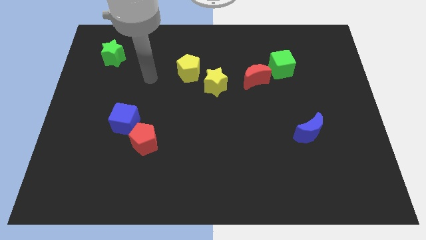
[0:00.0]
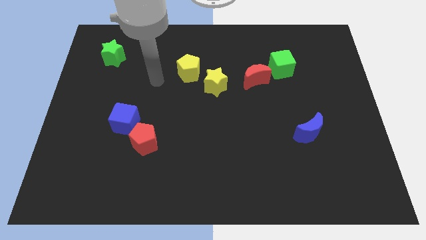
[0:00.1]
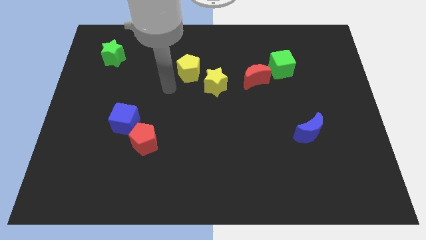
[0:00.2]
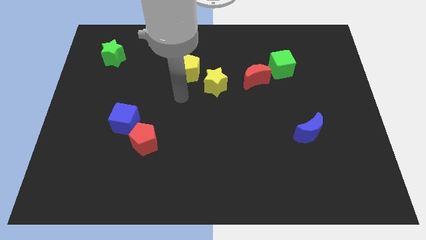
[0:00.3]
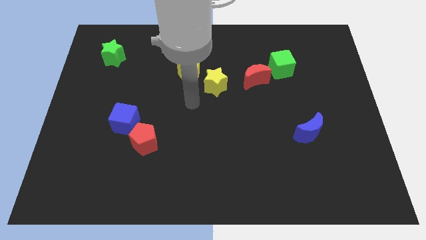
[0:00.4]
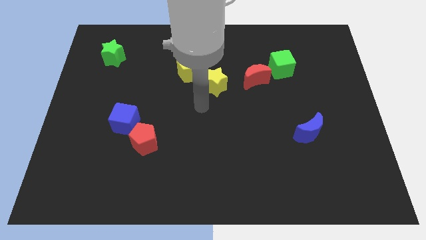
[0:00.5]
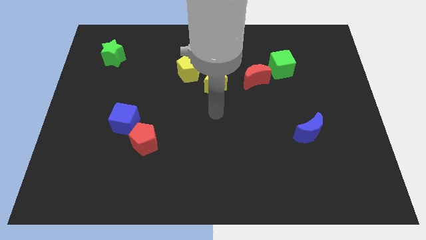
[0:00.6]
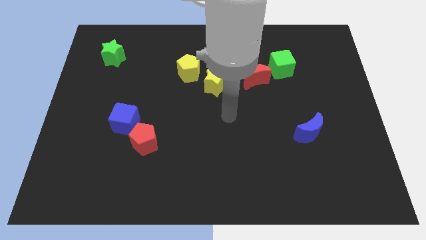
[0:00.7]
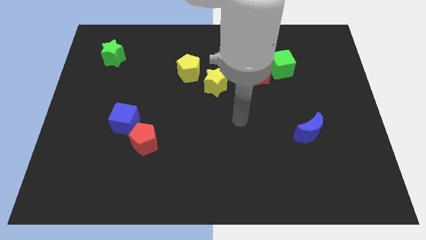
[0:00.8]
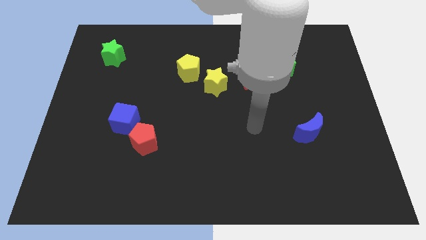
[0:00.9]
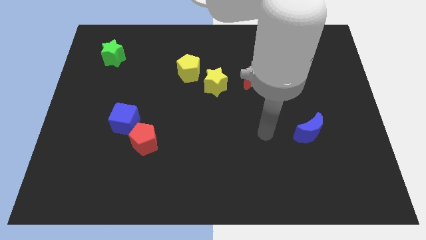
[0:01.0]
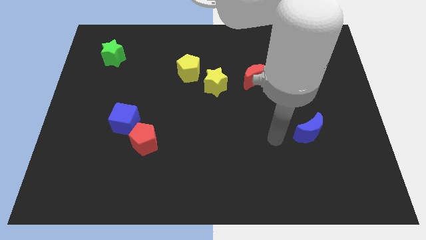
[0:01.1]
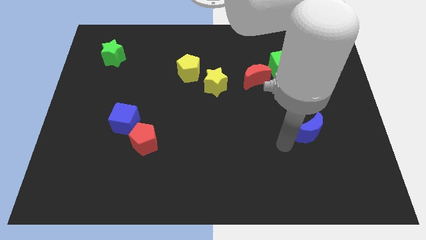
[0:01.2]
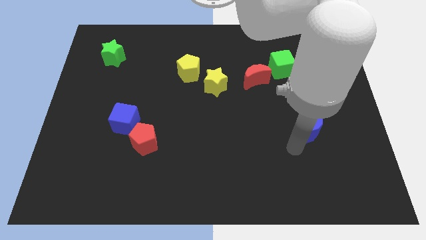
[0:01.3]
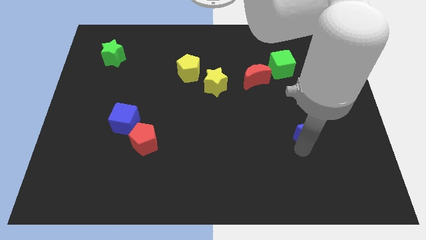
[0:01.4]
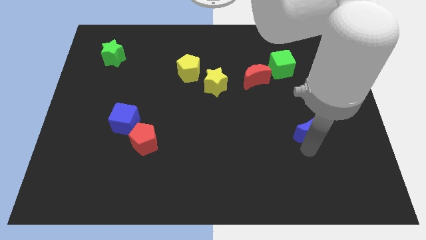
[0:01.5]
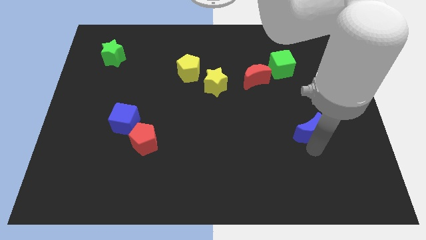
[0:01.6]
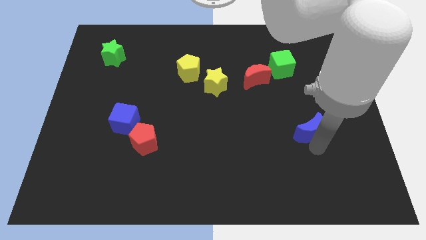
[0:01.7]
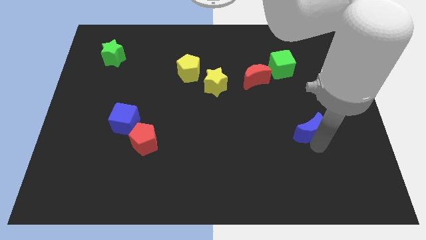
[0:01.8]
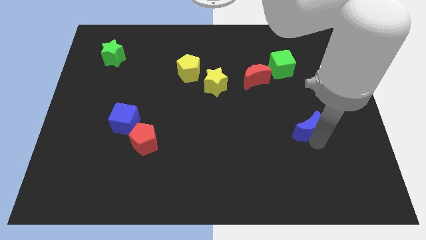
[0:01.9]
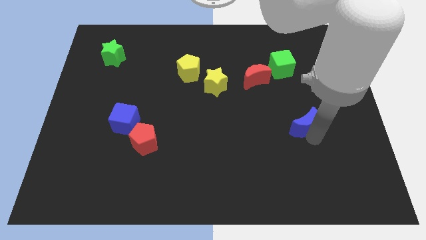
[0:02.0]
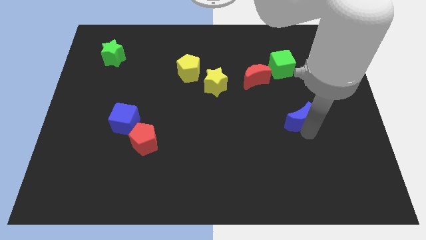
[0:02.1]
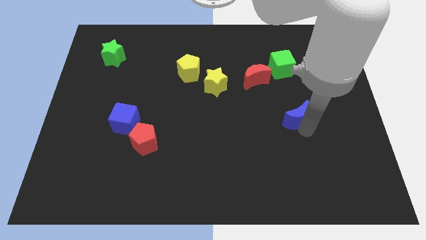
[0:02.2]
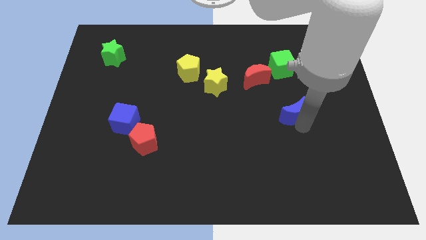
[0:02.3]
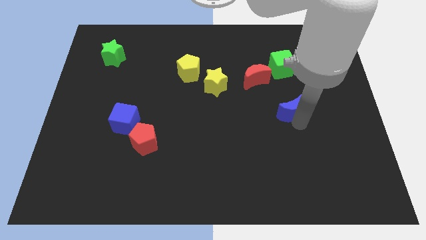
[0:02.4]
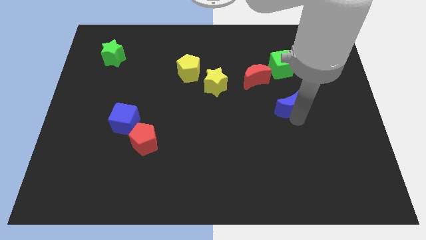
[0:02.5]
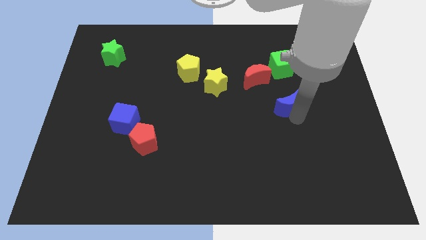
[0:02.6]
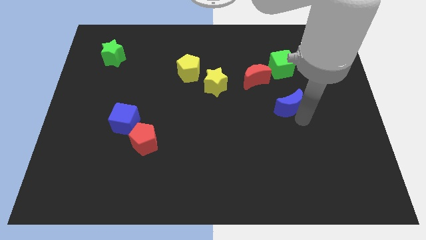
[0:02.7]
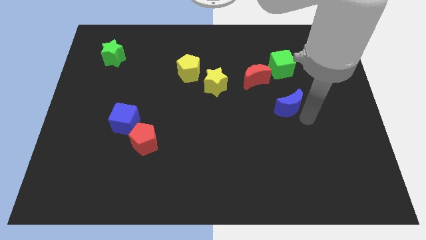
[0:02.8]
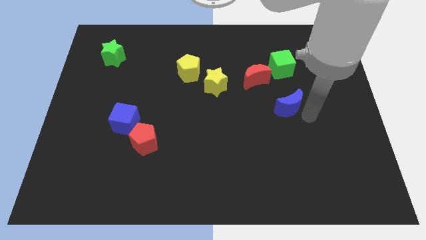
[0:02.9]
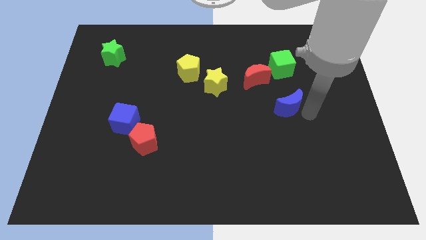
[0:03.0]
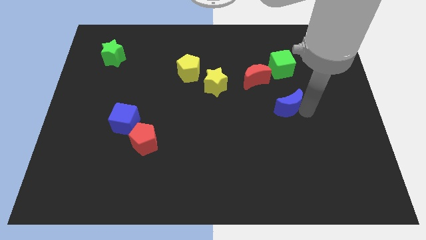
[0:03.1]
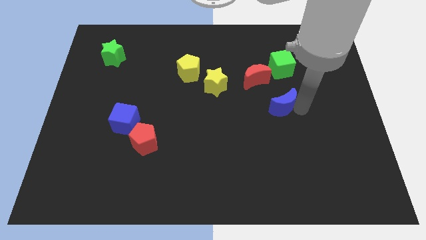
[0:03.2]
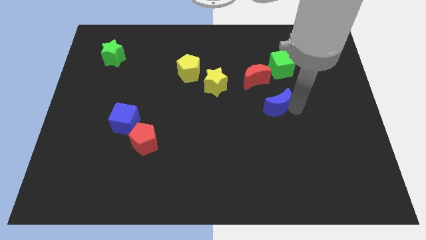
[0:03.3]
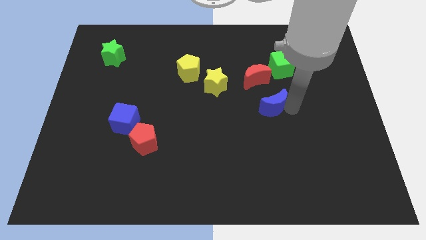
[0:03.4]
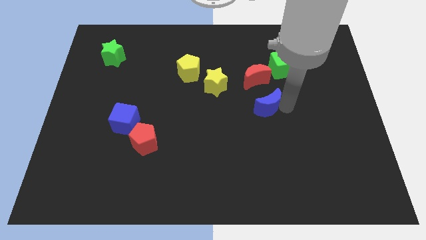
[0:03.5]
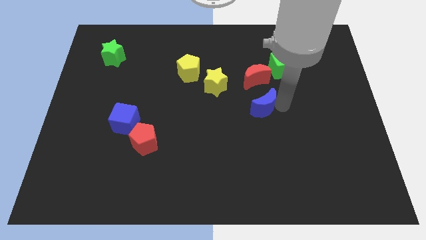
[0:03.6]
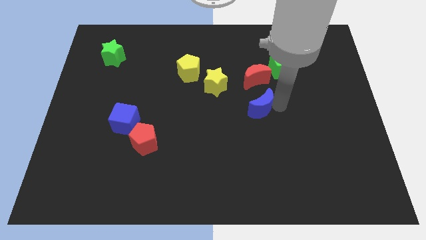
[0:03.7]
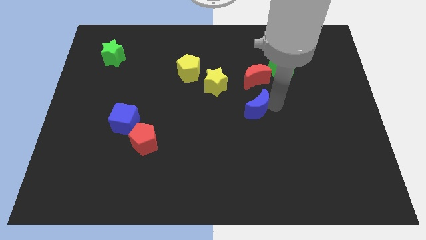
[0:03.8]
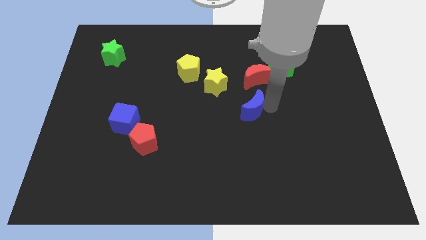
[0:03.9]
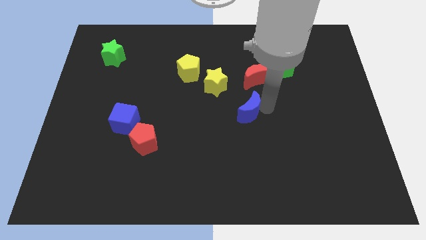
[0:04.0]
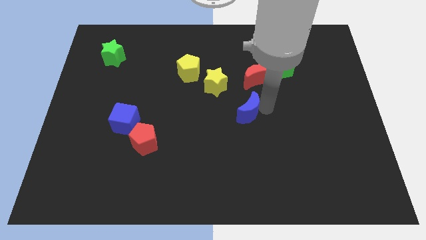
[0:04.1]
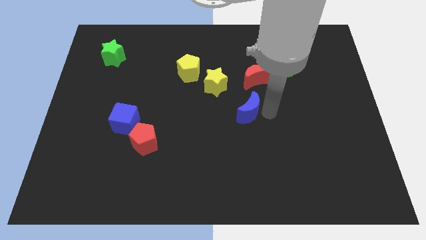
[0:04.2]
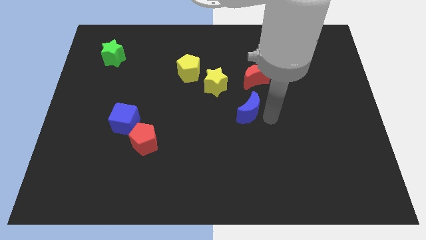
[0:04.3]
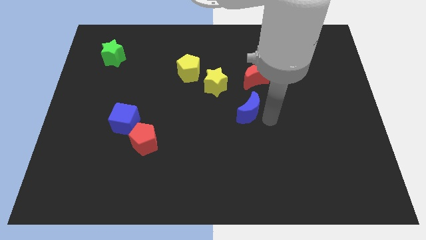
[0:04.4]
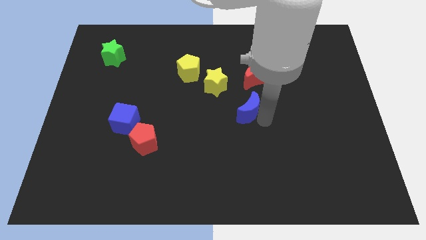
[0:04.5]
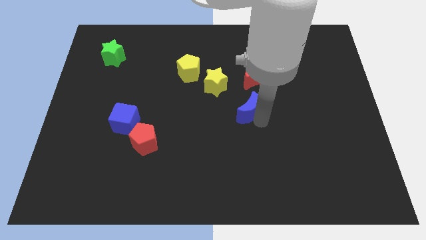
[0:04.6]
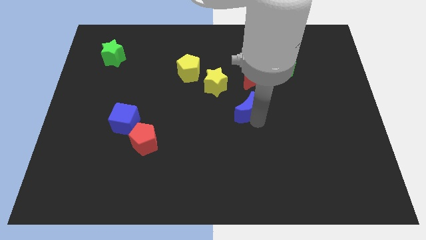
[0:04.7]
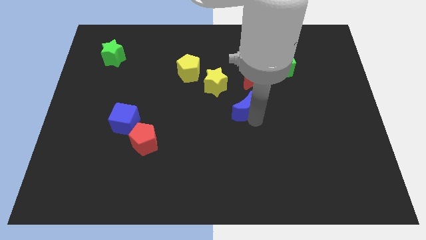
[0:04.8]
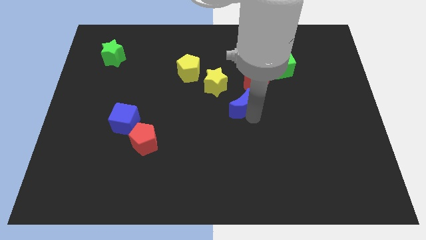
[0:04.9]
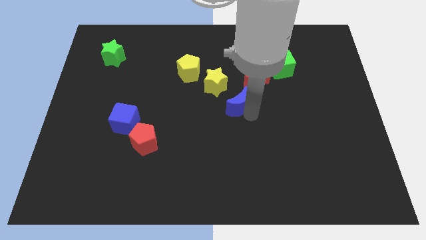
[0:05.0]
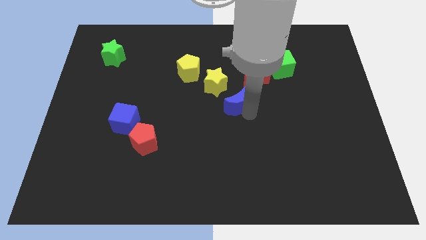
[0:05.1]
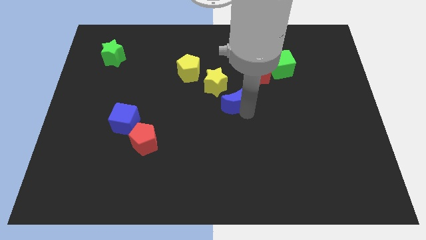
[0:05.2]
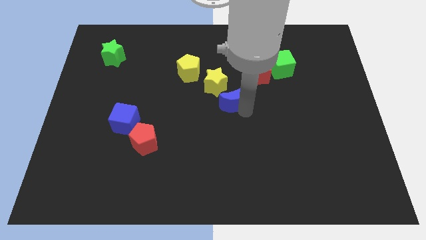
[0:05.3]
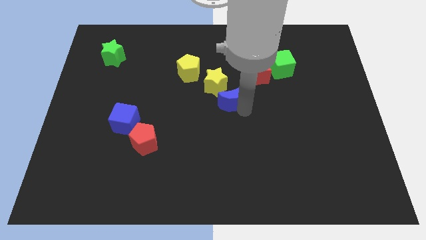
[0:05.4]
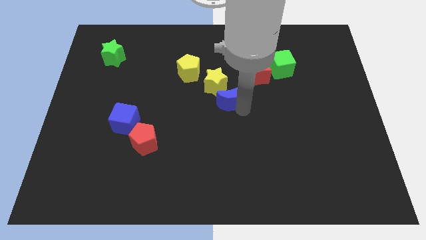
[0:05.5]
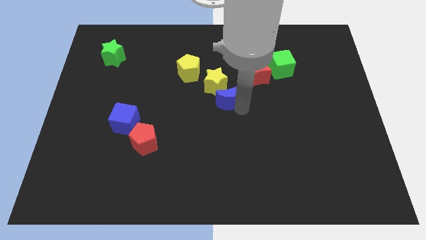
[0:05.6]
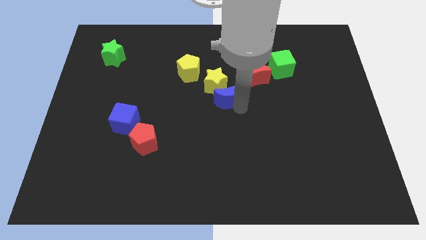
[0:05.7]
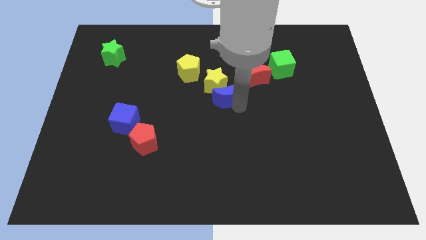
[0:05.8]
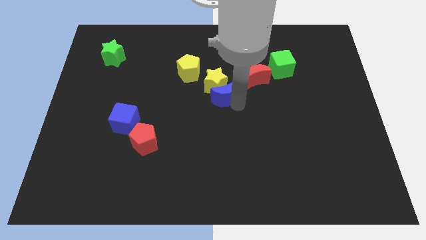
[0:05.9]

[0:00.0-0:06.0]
push the blue moon to the yellow star

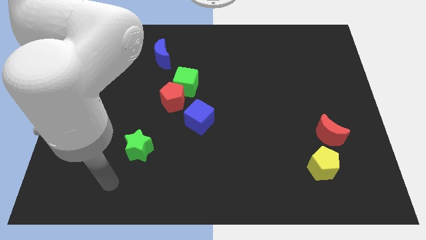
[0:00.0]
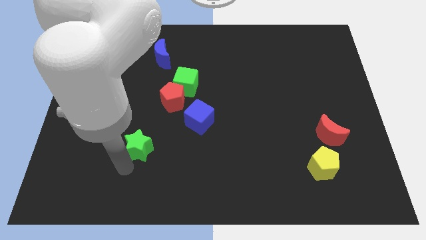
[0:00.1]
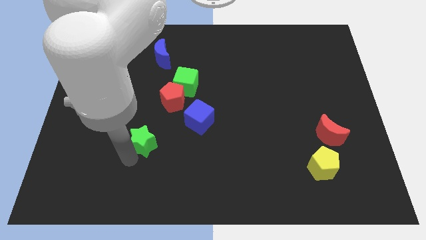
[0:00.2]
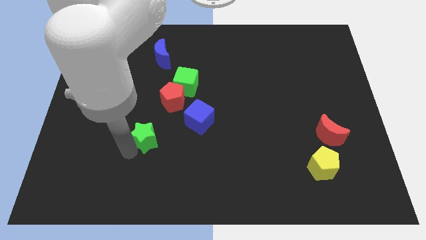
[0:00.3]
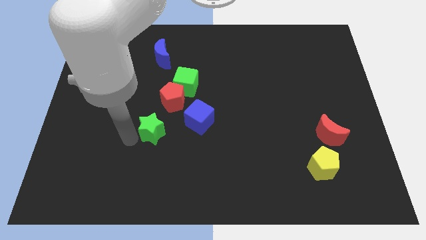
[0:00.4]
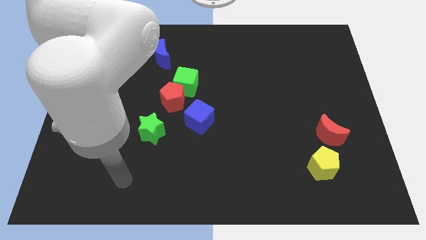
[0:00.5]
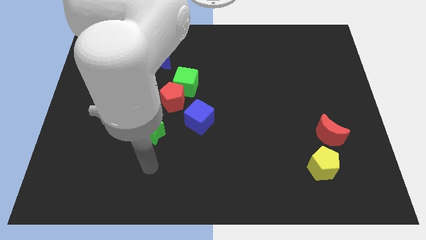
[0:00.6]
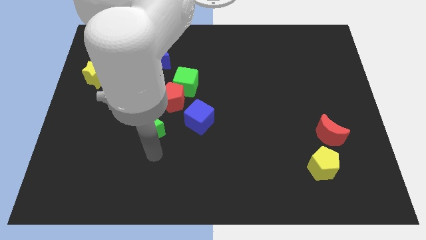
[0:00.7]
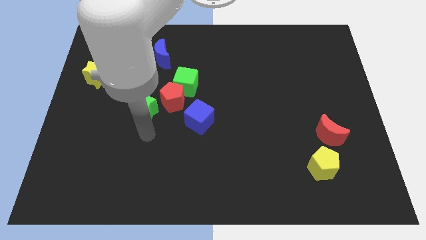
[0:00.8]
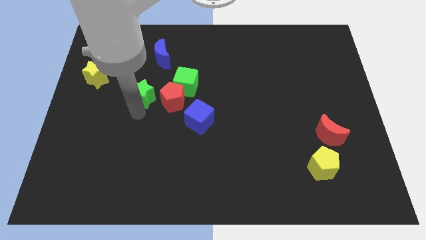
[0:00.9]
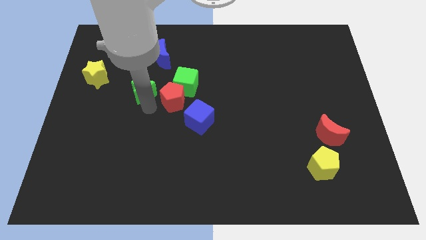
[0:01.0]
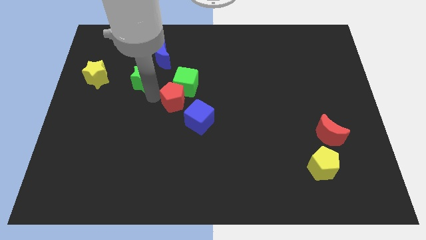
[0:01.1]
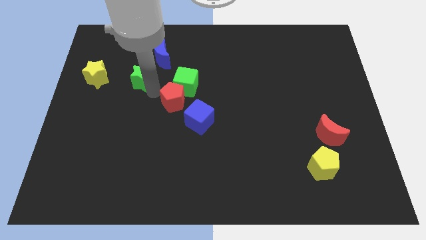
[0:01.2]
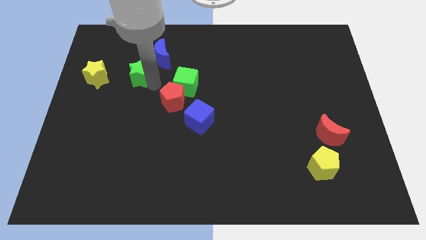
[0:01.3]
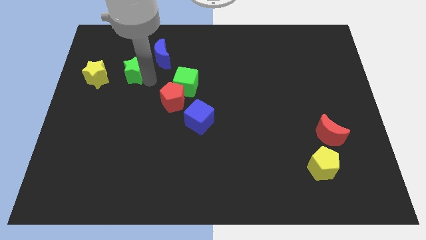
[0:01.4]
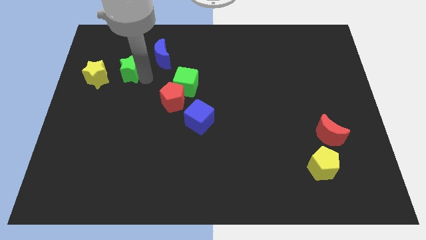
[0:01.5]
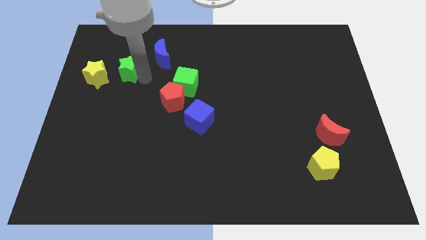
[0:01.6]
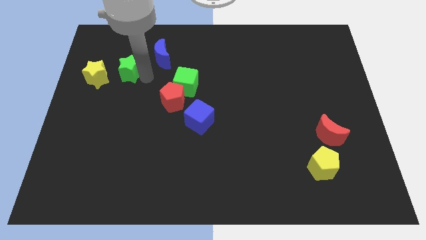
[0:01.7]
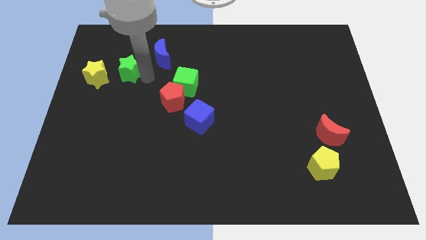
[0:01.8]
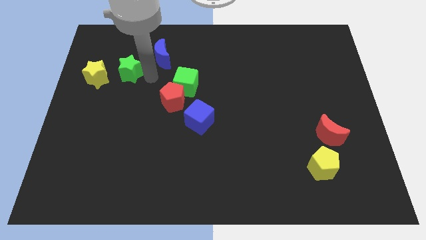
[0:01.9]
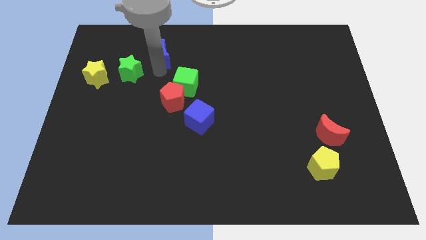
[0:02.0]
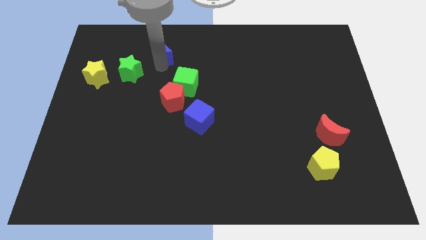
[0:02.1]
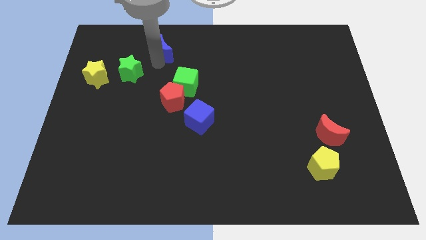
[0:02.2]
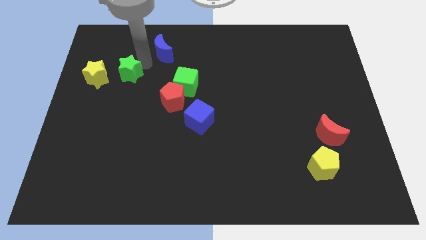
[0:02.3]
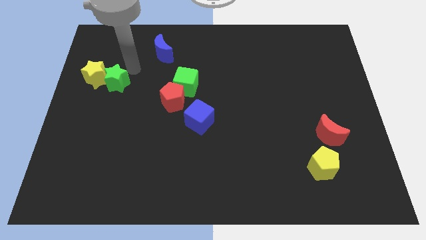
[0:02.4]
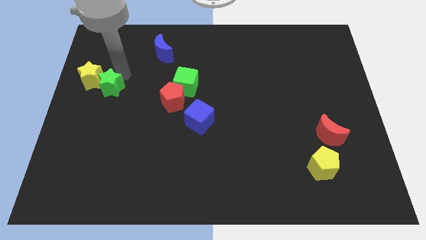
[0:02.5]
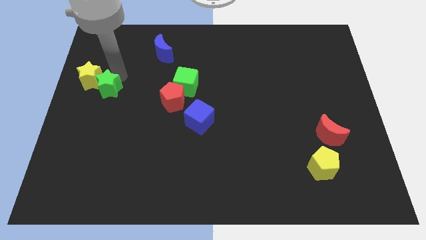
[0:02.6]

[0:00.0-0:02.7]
move the green star next to the yellow star
